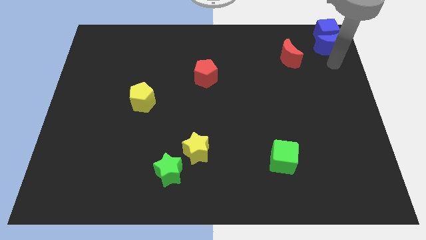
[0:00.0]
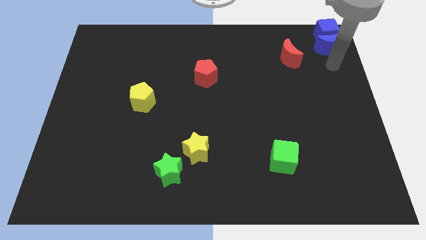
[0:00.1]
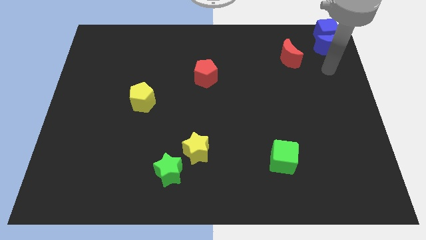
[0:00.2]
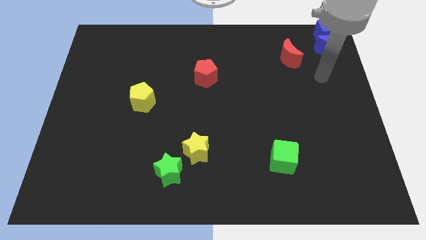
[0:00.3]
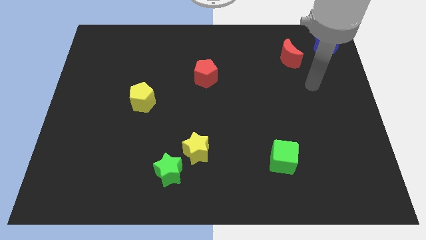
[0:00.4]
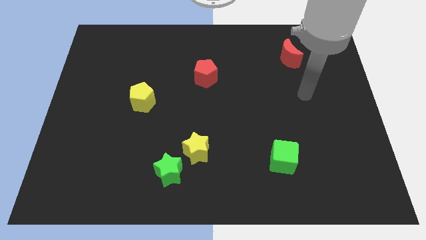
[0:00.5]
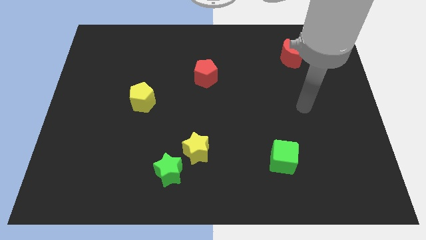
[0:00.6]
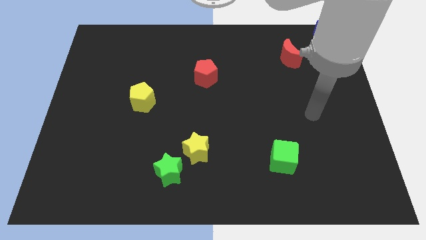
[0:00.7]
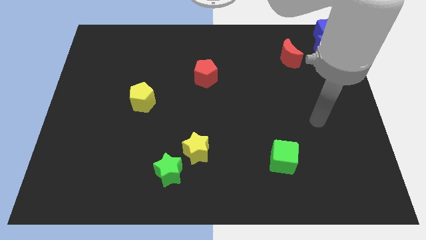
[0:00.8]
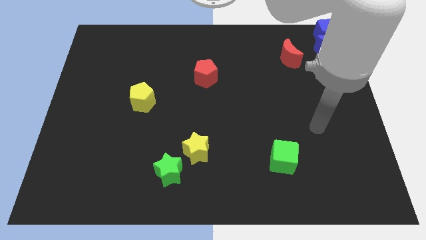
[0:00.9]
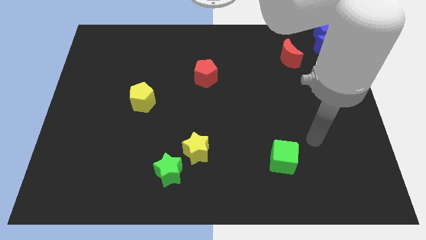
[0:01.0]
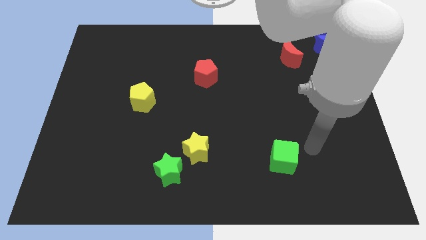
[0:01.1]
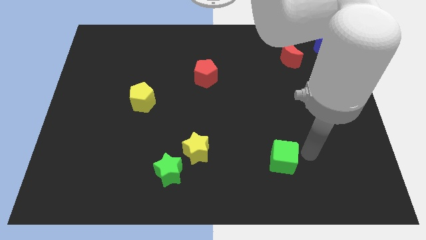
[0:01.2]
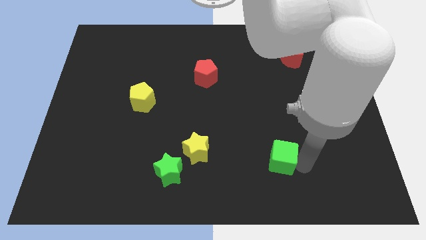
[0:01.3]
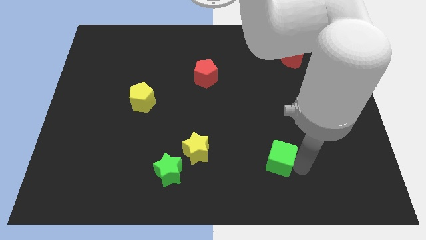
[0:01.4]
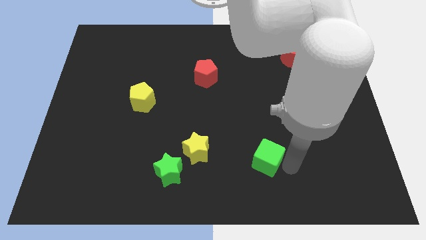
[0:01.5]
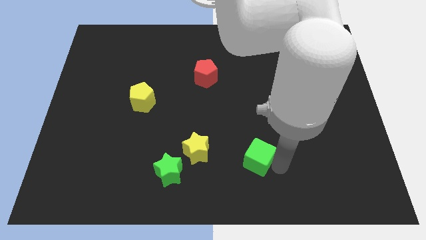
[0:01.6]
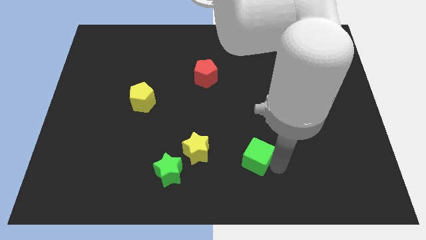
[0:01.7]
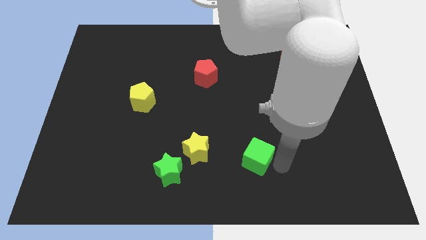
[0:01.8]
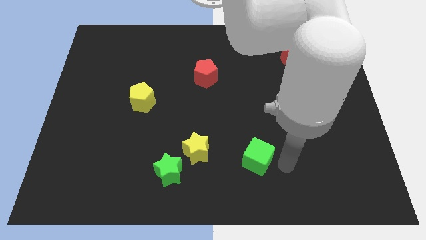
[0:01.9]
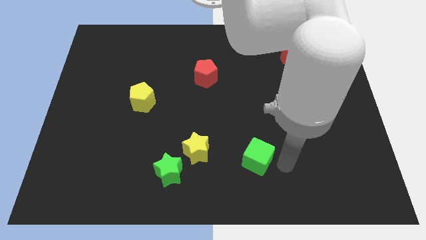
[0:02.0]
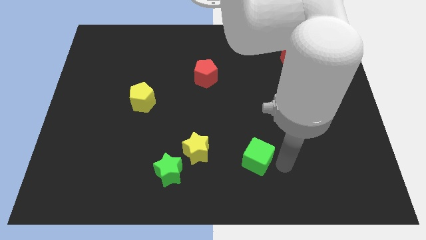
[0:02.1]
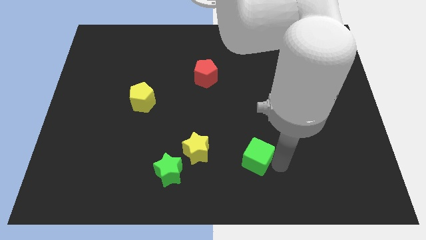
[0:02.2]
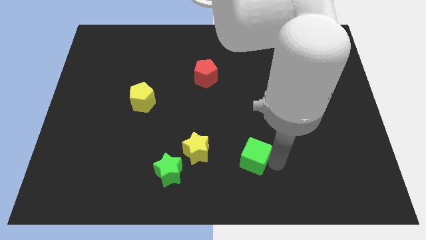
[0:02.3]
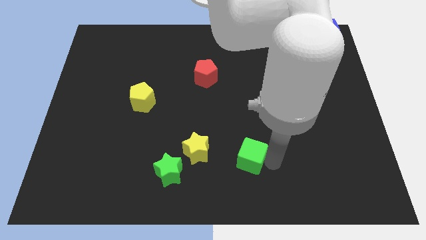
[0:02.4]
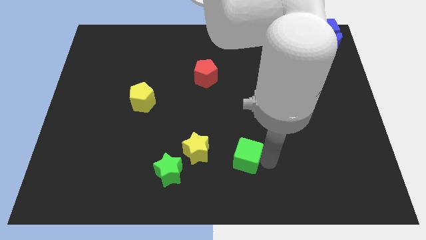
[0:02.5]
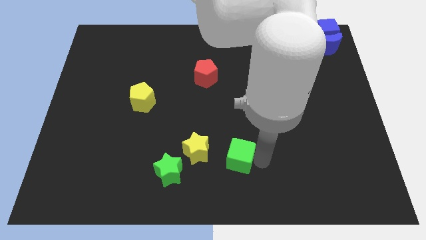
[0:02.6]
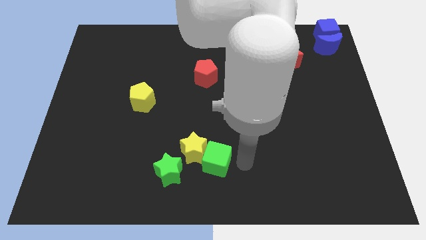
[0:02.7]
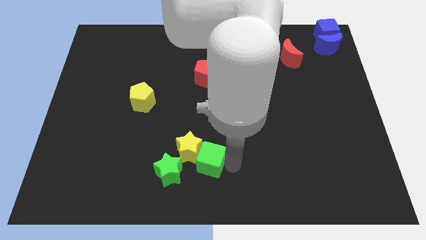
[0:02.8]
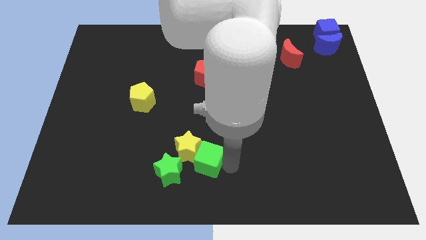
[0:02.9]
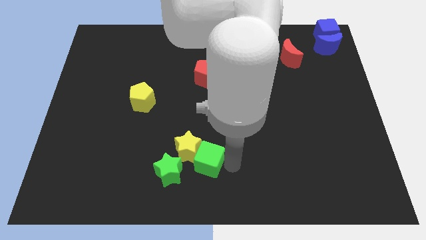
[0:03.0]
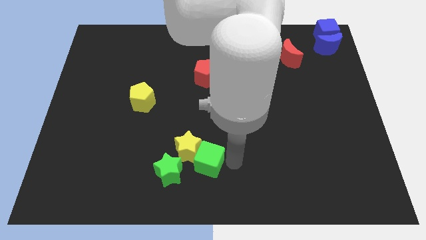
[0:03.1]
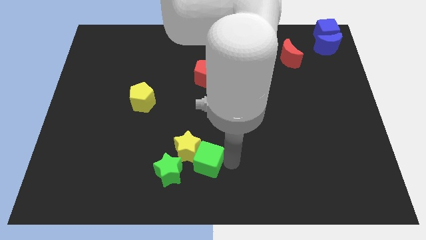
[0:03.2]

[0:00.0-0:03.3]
push the green cube into the right side of the yellow star

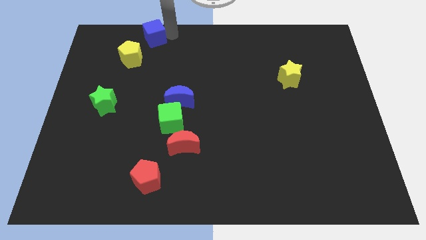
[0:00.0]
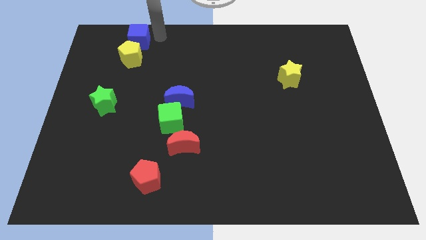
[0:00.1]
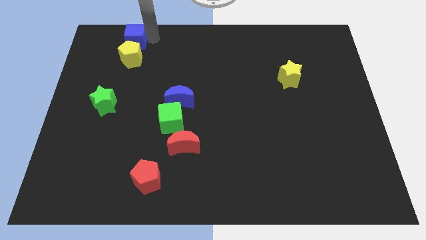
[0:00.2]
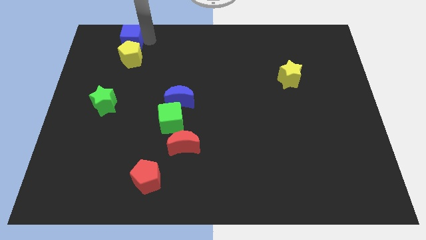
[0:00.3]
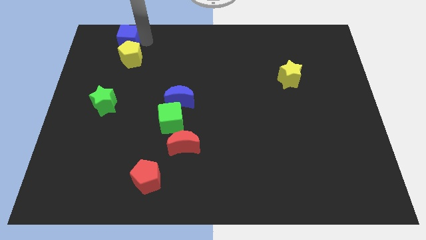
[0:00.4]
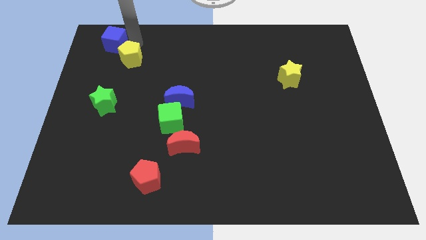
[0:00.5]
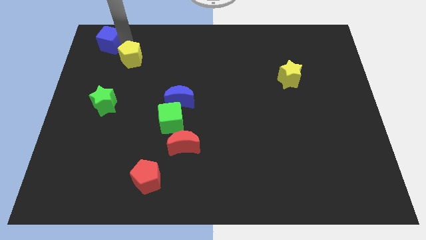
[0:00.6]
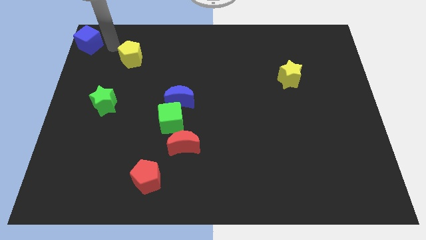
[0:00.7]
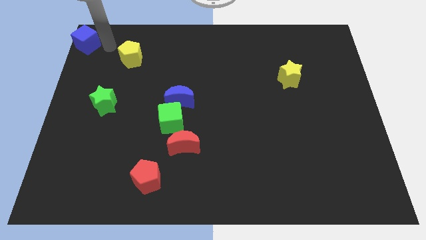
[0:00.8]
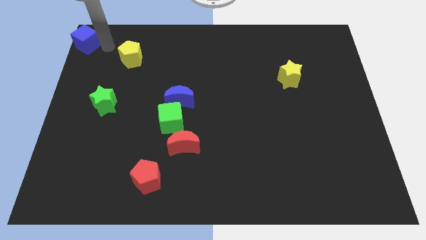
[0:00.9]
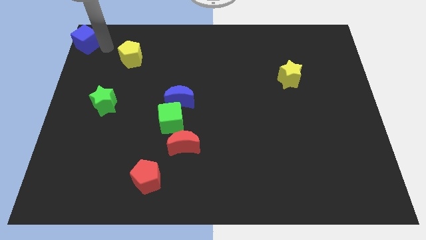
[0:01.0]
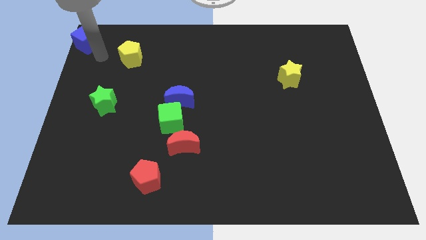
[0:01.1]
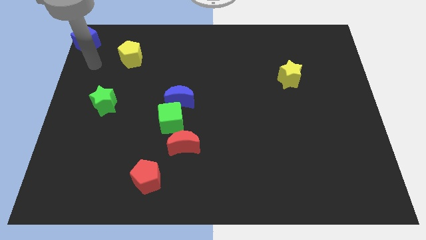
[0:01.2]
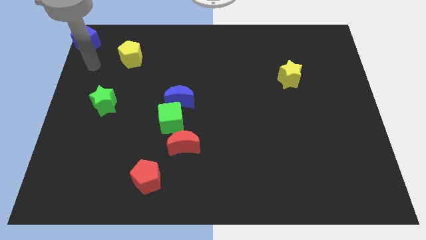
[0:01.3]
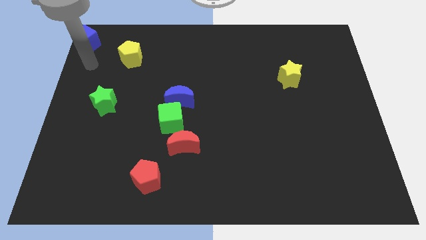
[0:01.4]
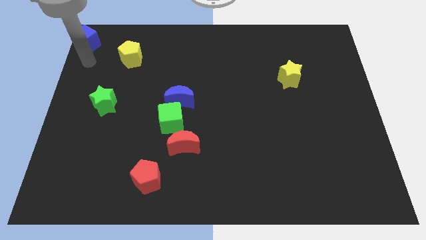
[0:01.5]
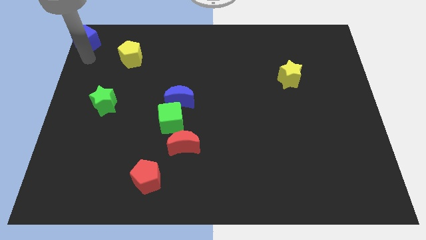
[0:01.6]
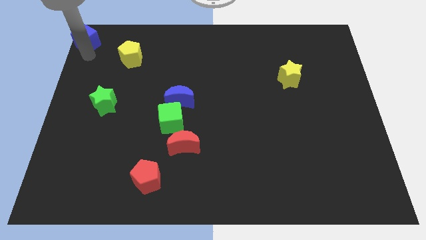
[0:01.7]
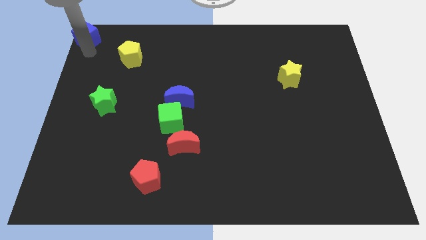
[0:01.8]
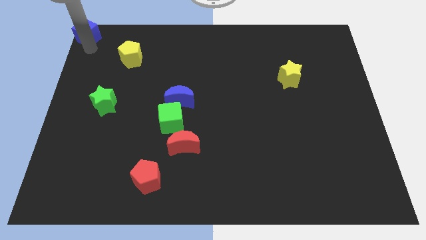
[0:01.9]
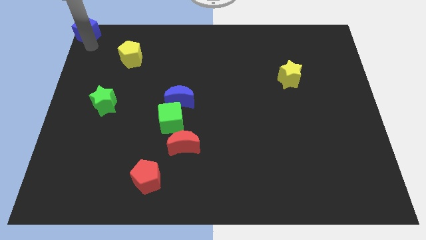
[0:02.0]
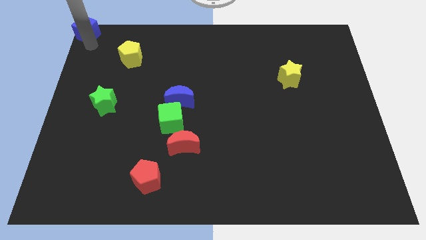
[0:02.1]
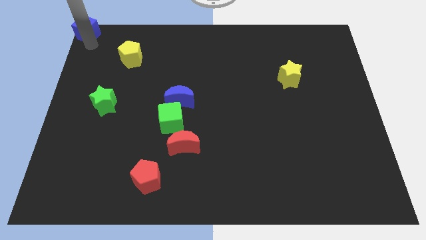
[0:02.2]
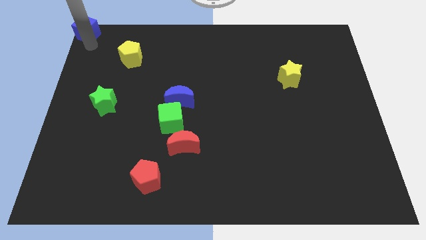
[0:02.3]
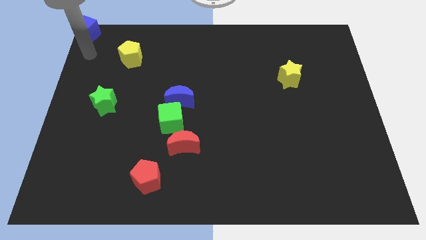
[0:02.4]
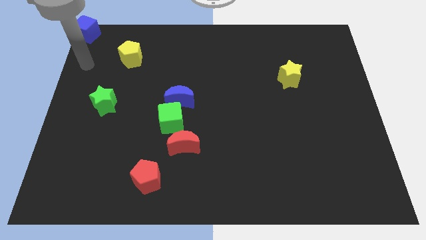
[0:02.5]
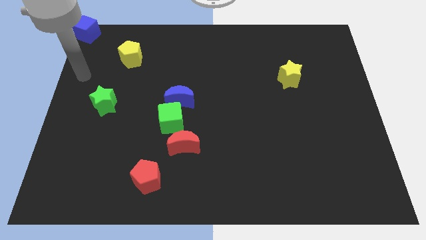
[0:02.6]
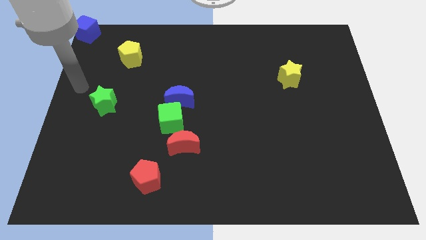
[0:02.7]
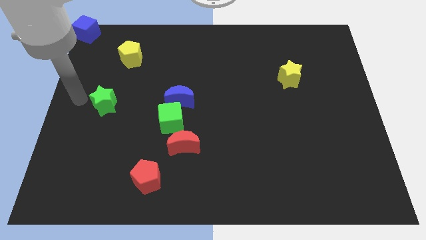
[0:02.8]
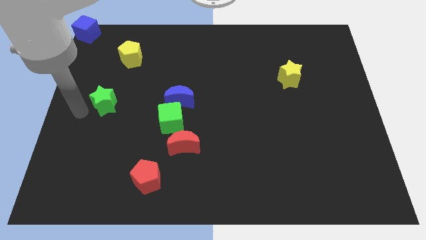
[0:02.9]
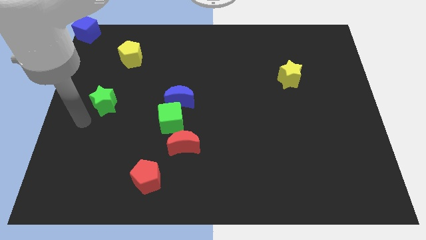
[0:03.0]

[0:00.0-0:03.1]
move the blue cube to the top left corner of the board

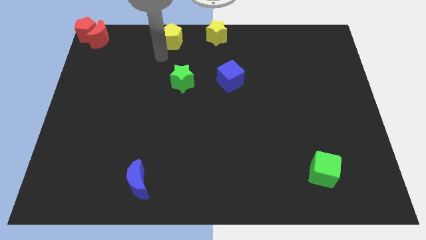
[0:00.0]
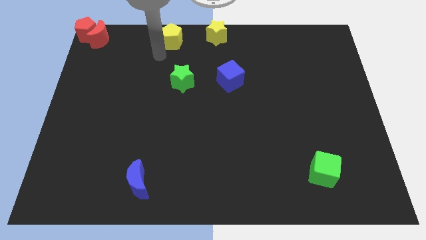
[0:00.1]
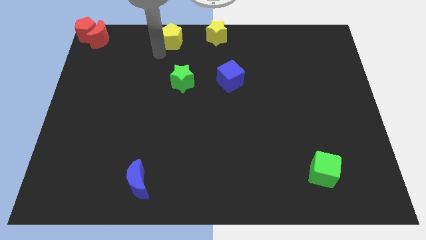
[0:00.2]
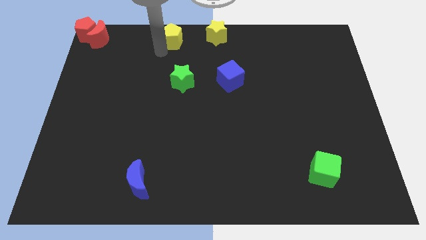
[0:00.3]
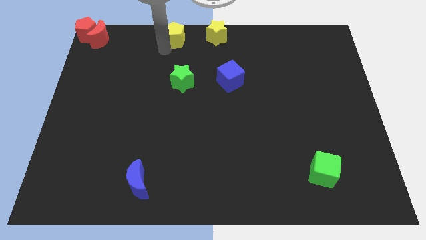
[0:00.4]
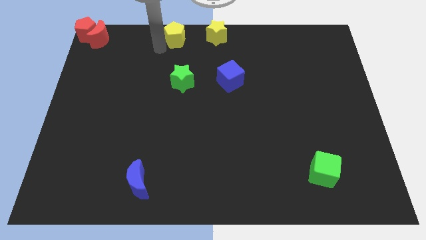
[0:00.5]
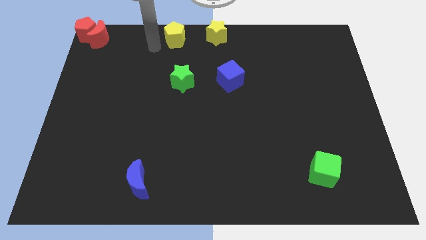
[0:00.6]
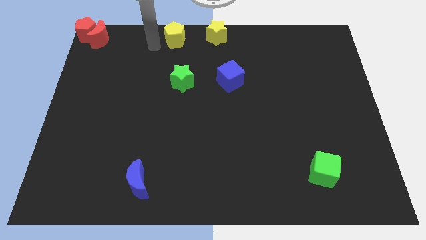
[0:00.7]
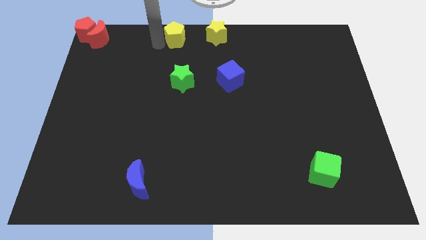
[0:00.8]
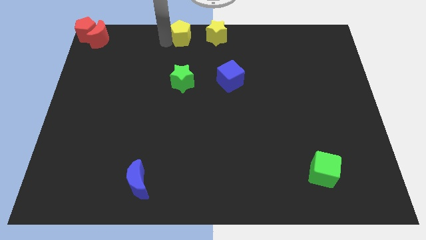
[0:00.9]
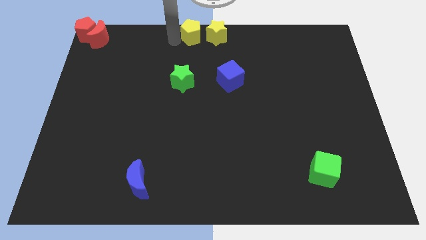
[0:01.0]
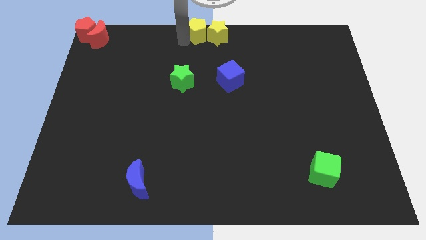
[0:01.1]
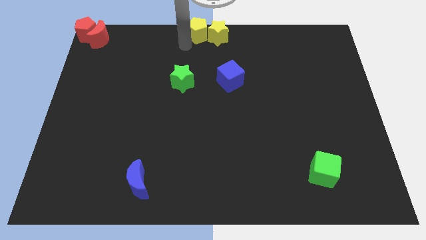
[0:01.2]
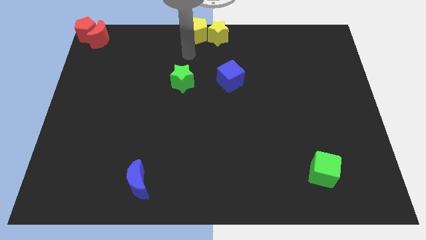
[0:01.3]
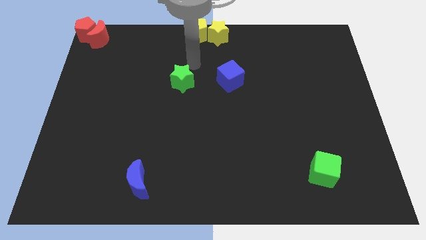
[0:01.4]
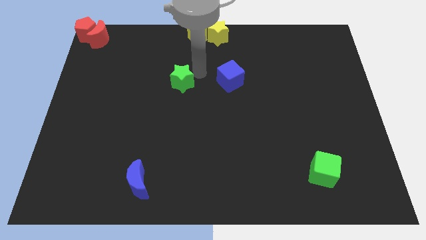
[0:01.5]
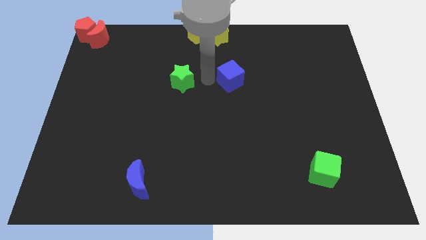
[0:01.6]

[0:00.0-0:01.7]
push the yellow pentagon into the yellow star

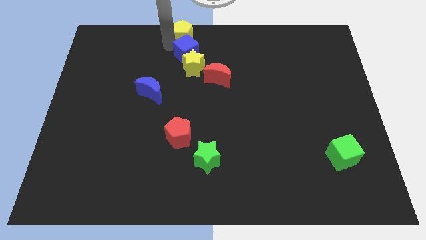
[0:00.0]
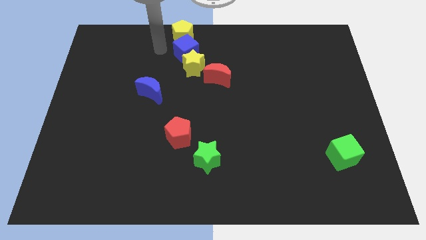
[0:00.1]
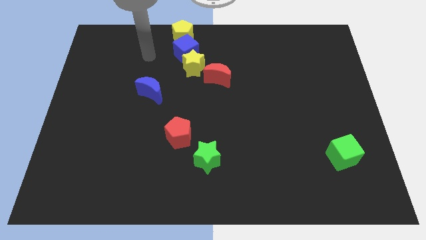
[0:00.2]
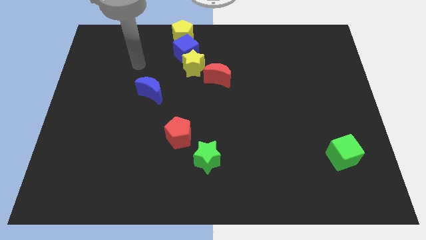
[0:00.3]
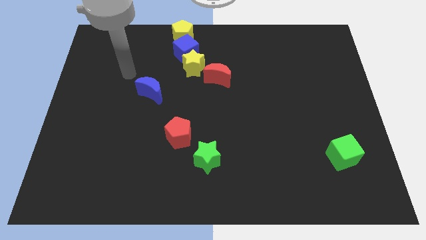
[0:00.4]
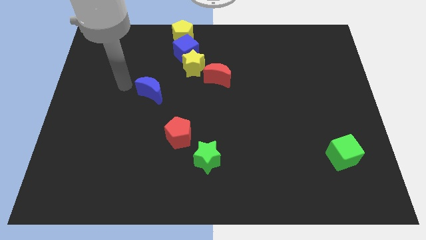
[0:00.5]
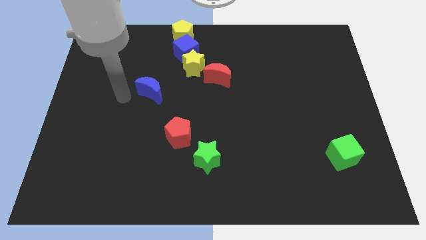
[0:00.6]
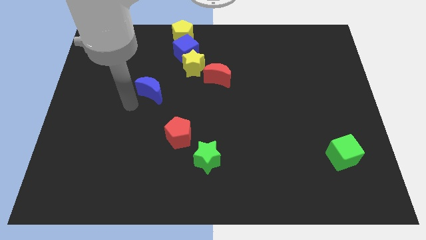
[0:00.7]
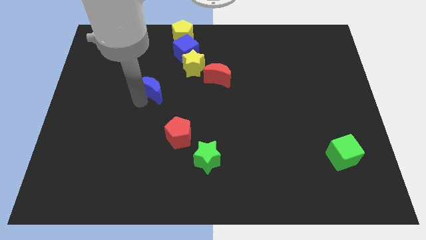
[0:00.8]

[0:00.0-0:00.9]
point your arm below blue moon

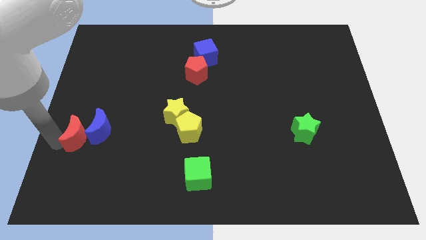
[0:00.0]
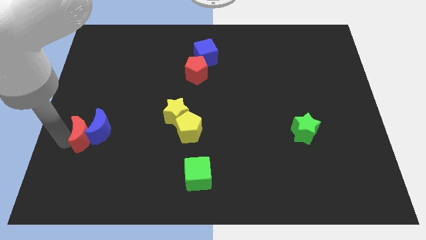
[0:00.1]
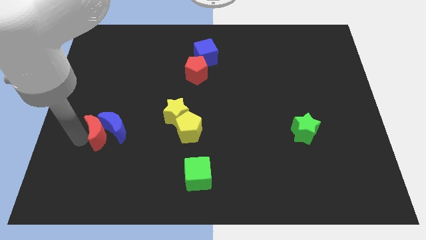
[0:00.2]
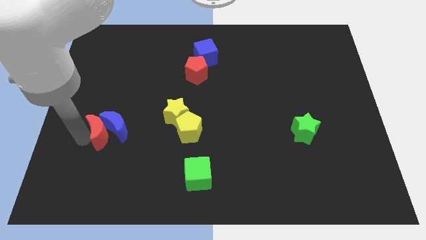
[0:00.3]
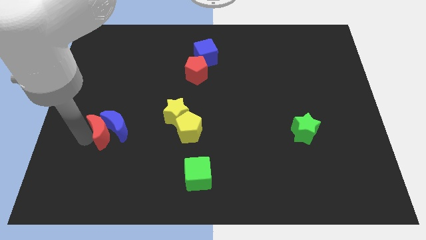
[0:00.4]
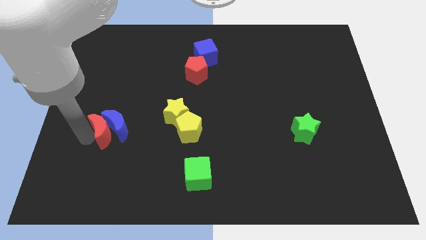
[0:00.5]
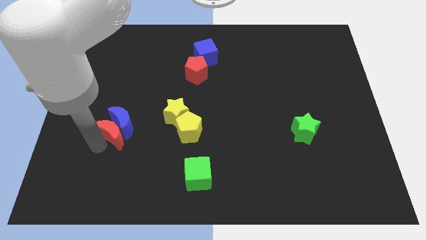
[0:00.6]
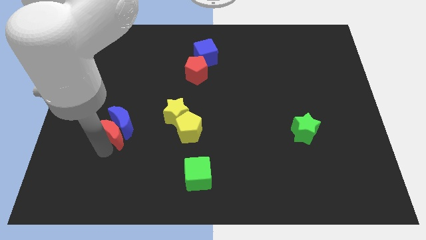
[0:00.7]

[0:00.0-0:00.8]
move the red crescent along with the blue crescent to the slightly to the right
